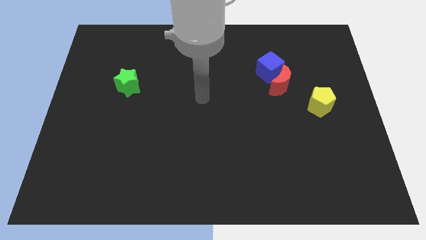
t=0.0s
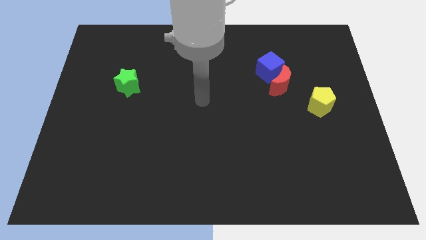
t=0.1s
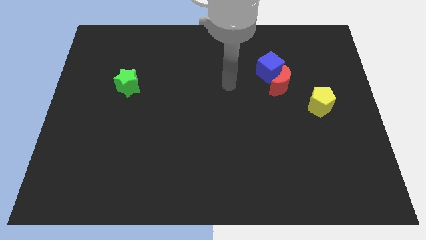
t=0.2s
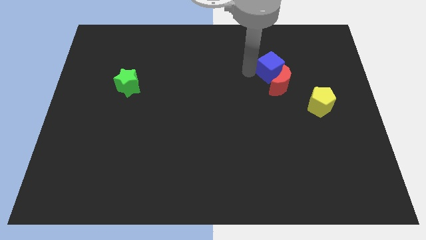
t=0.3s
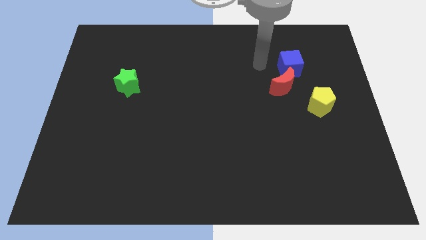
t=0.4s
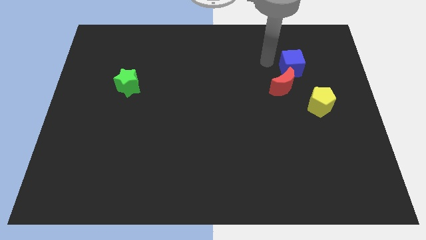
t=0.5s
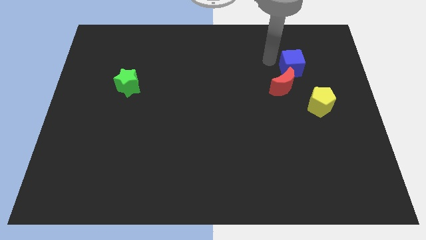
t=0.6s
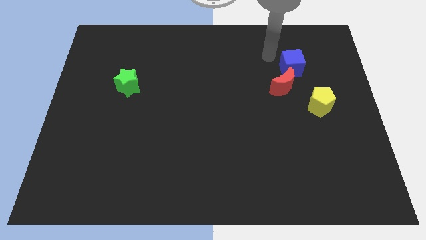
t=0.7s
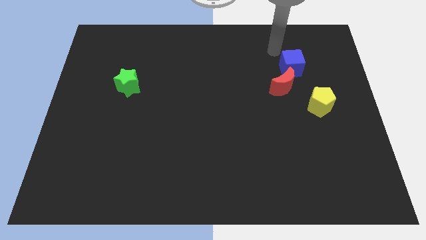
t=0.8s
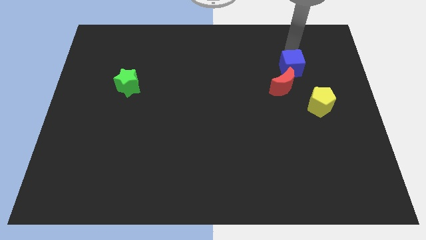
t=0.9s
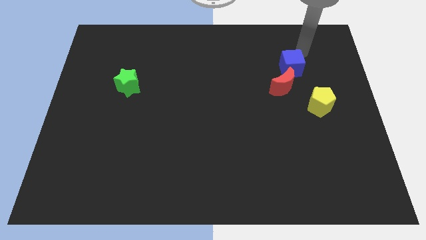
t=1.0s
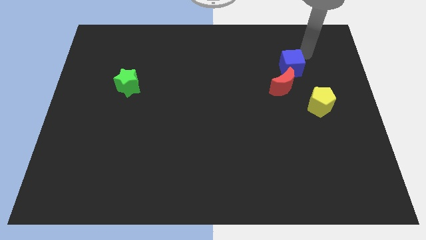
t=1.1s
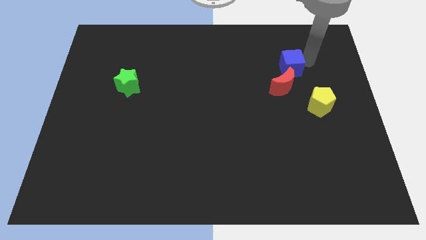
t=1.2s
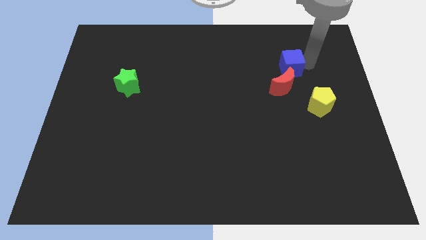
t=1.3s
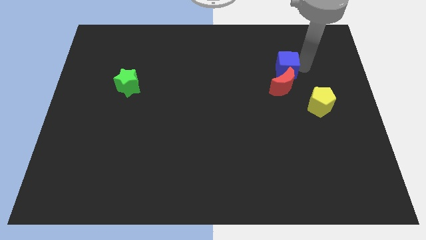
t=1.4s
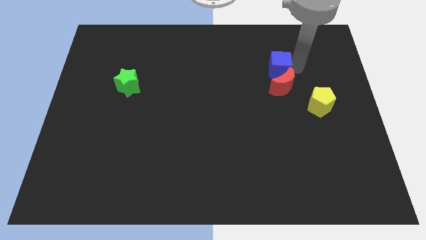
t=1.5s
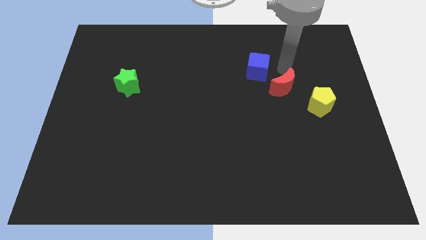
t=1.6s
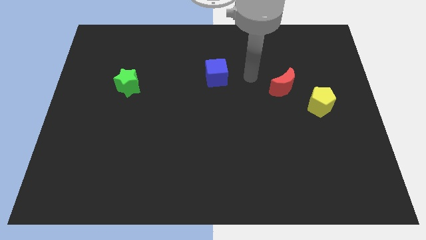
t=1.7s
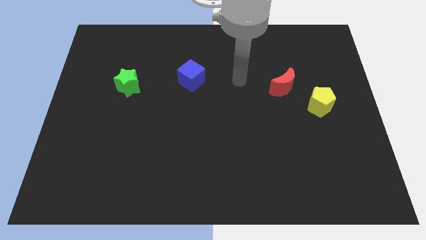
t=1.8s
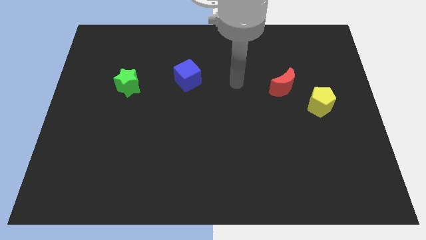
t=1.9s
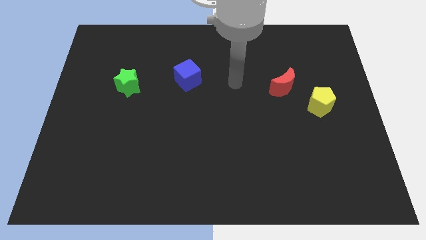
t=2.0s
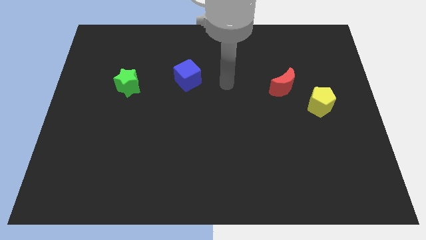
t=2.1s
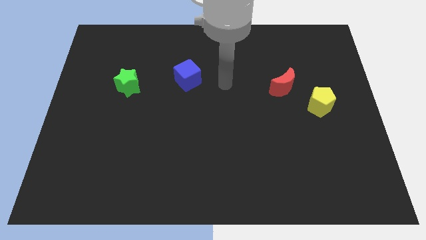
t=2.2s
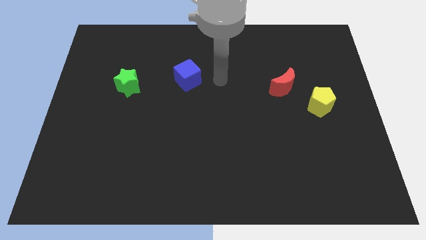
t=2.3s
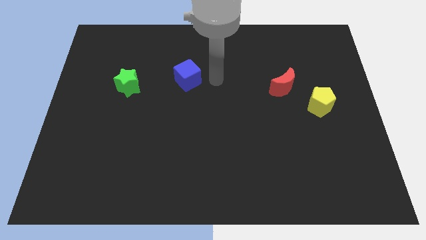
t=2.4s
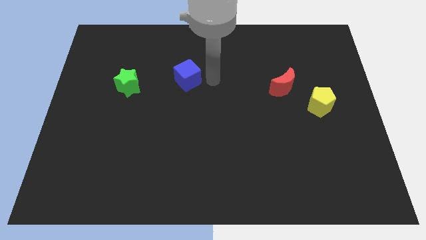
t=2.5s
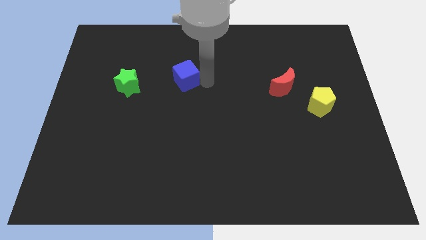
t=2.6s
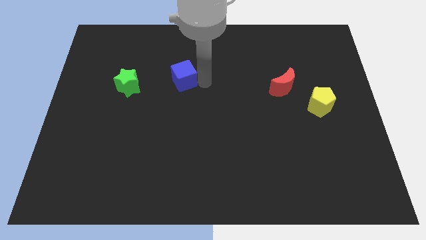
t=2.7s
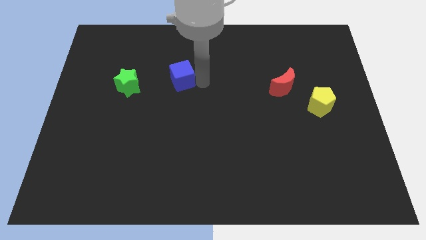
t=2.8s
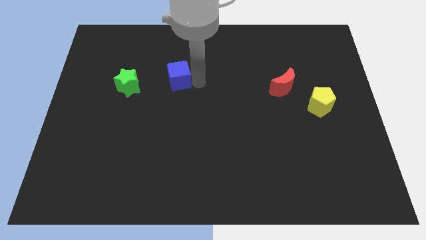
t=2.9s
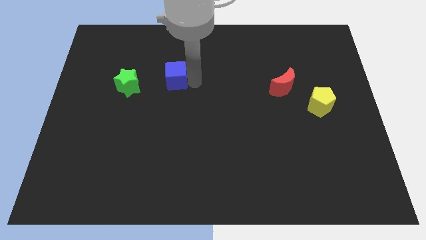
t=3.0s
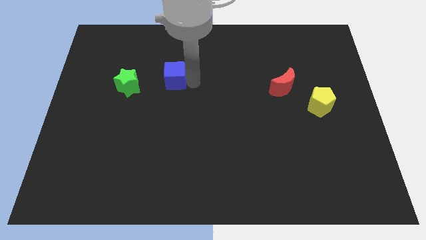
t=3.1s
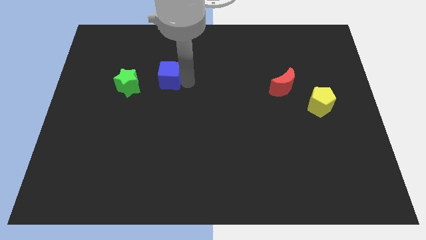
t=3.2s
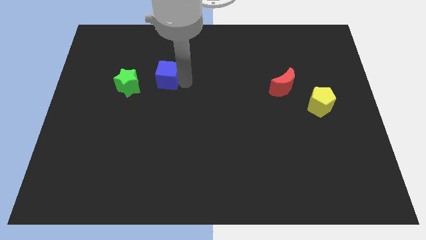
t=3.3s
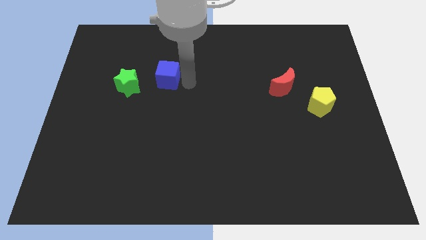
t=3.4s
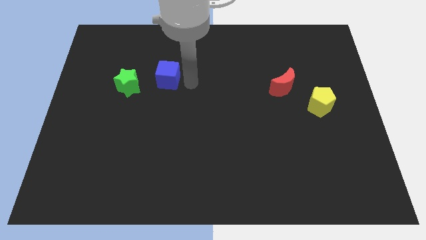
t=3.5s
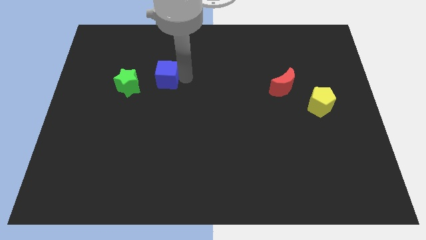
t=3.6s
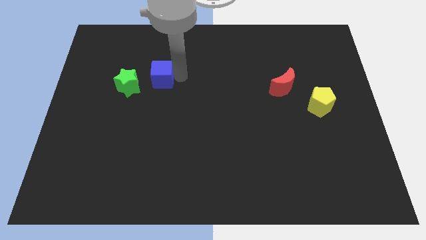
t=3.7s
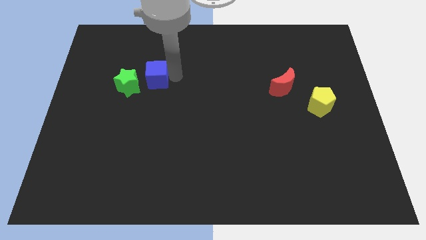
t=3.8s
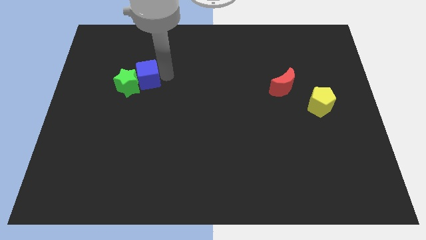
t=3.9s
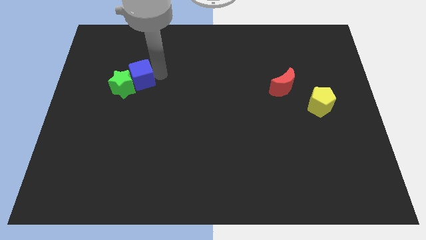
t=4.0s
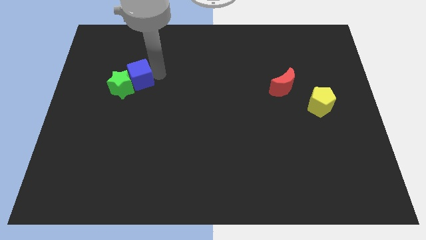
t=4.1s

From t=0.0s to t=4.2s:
put the blue cube towards the green star

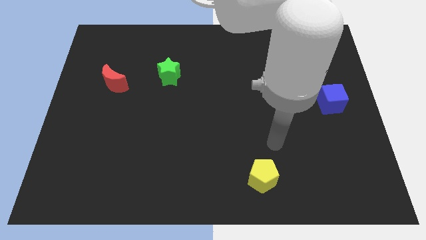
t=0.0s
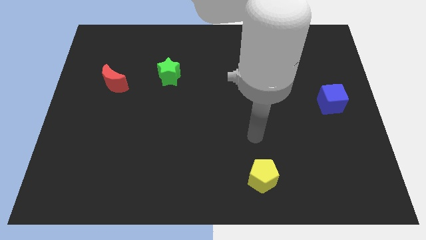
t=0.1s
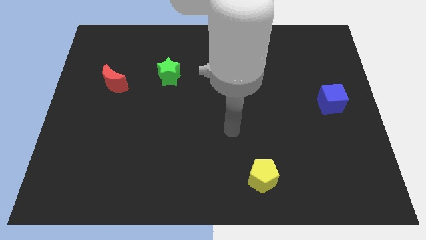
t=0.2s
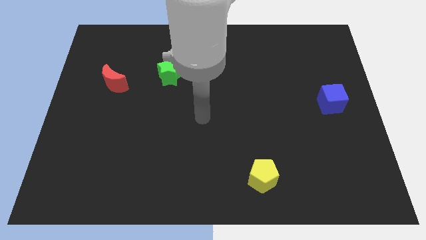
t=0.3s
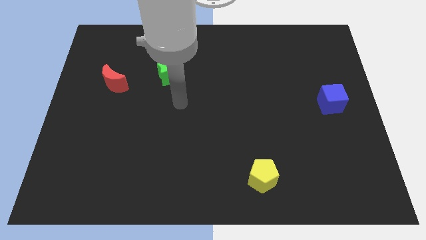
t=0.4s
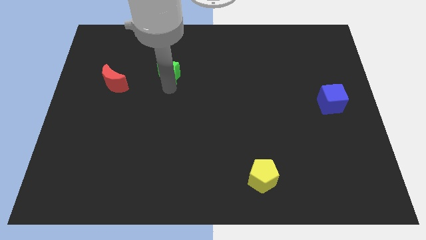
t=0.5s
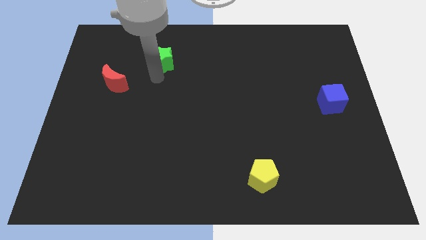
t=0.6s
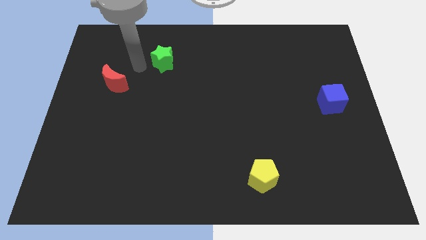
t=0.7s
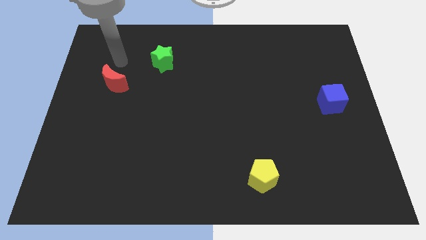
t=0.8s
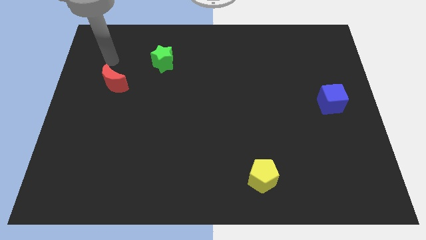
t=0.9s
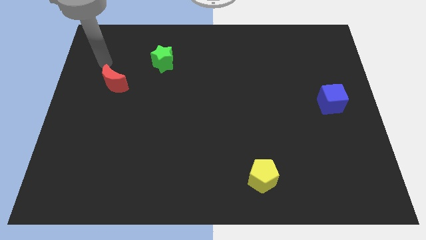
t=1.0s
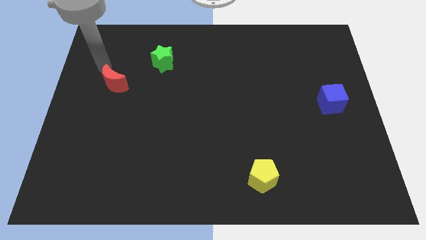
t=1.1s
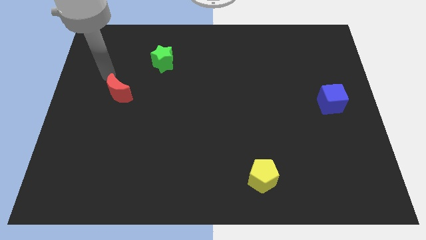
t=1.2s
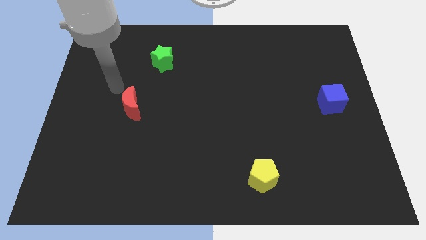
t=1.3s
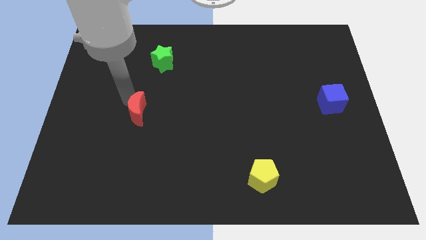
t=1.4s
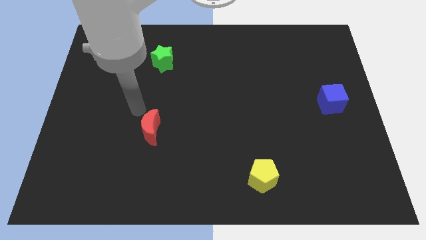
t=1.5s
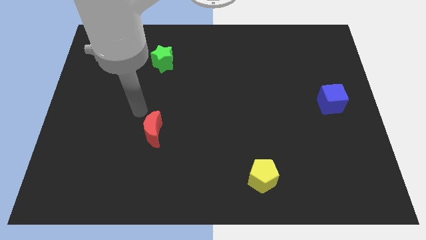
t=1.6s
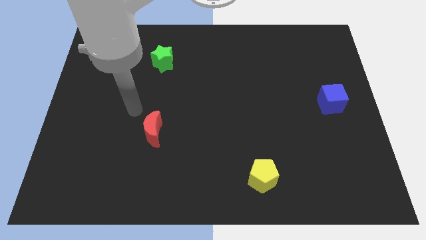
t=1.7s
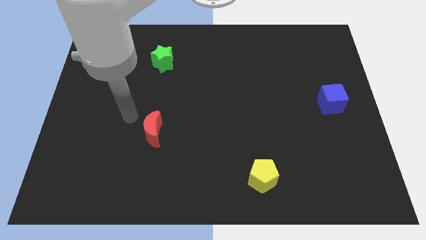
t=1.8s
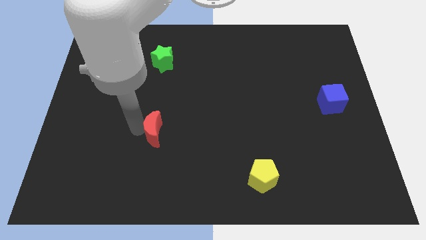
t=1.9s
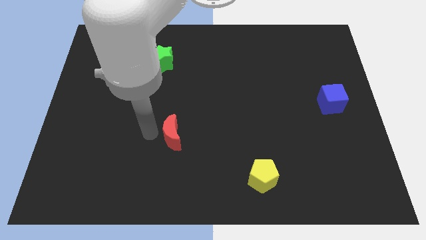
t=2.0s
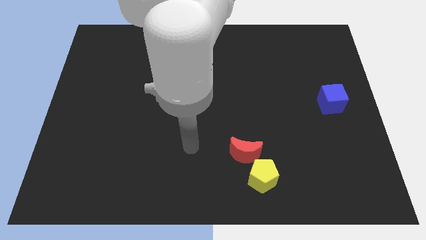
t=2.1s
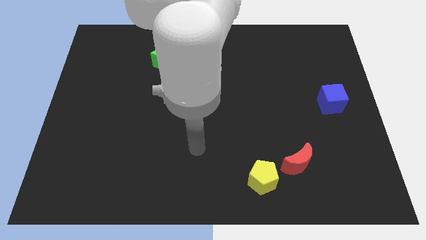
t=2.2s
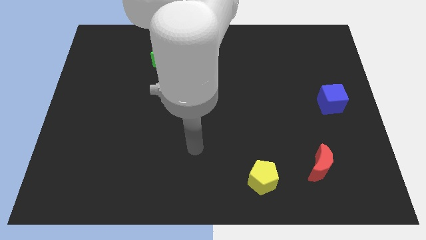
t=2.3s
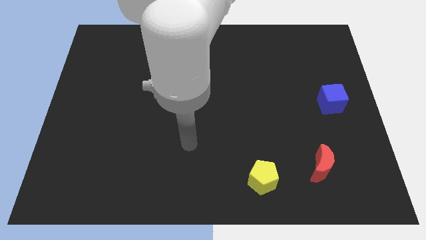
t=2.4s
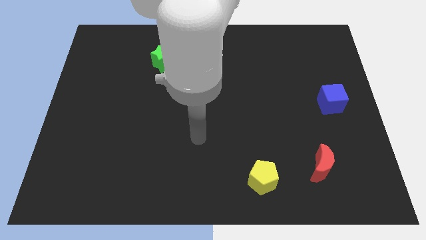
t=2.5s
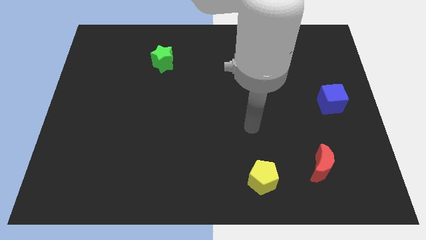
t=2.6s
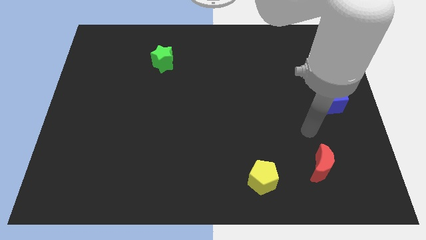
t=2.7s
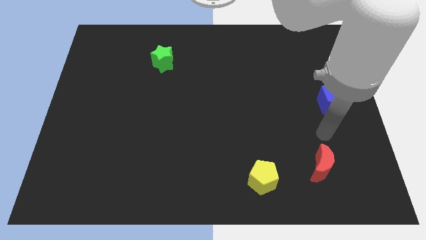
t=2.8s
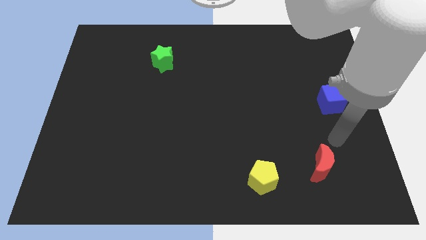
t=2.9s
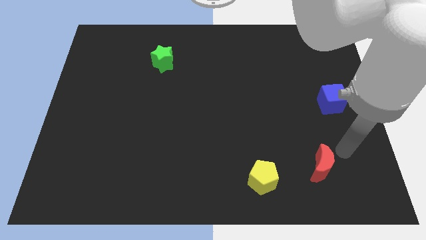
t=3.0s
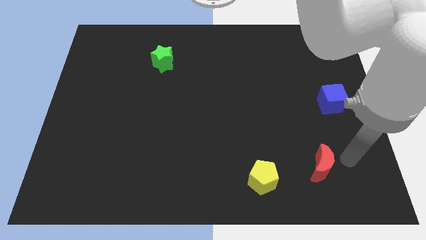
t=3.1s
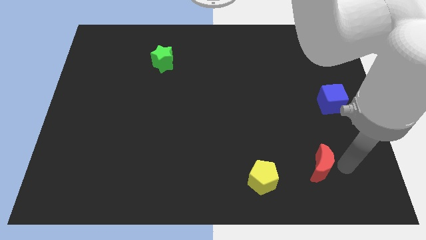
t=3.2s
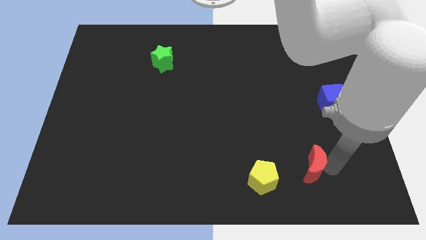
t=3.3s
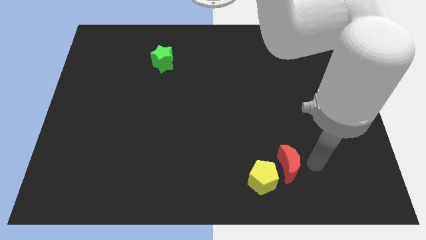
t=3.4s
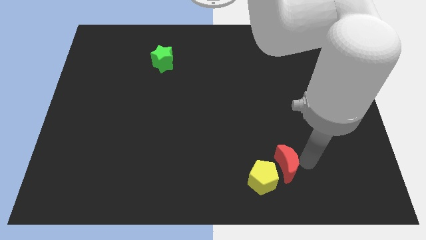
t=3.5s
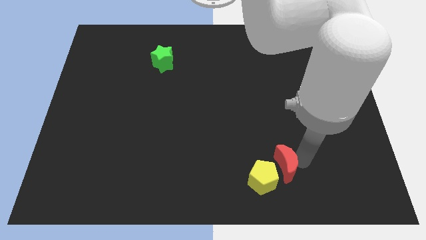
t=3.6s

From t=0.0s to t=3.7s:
push the red block close to the pentagon

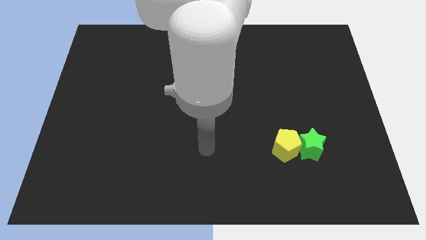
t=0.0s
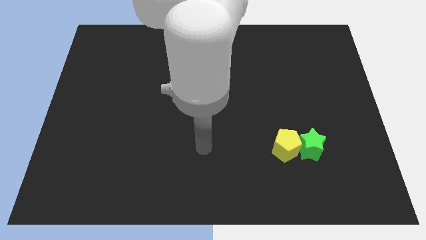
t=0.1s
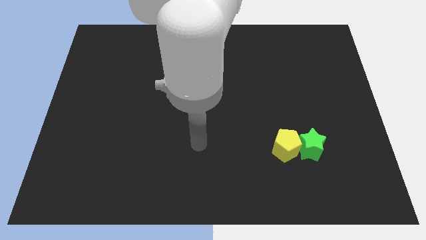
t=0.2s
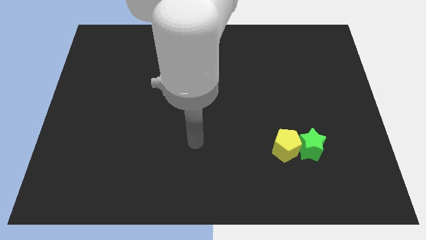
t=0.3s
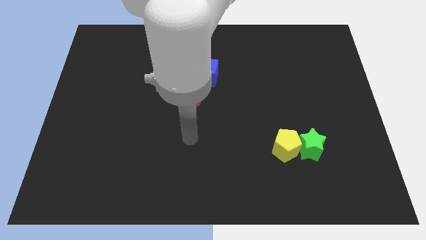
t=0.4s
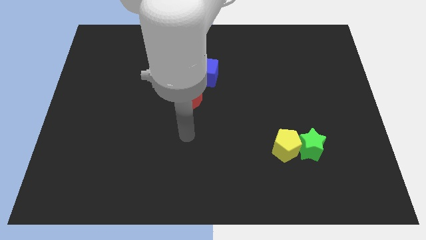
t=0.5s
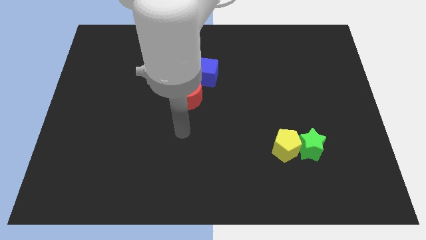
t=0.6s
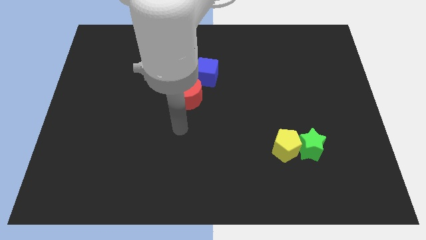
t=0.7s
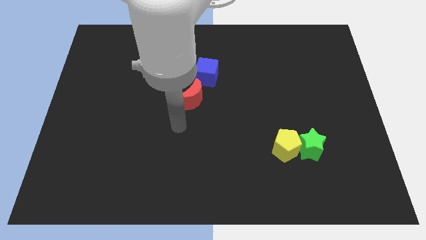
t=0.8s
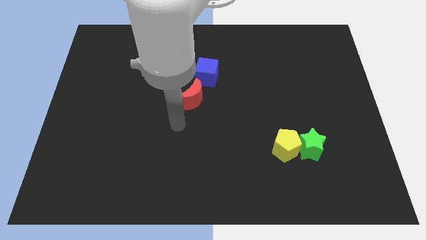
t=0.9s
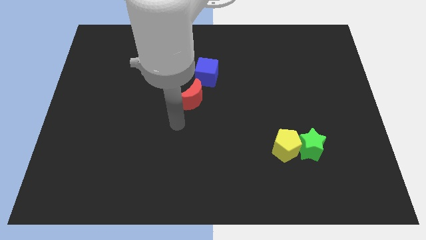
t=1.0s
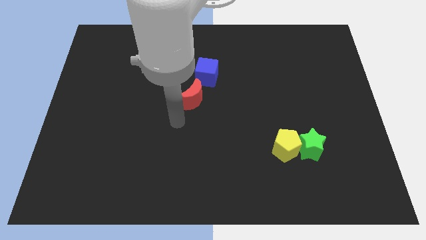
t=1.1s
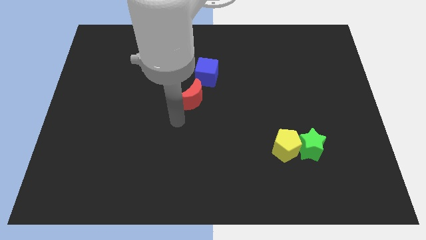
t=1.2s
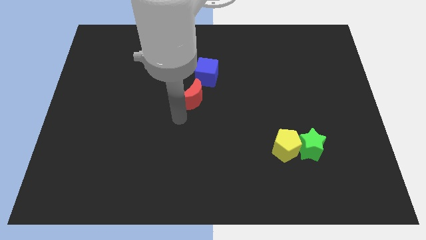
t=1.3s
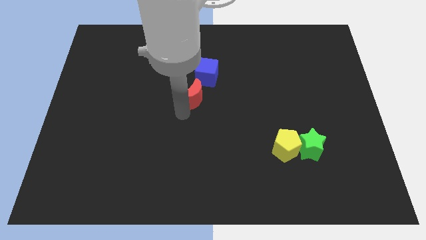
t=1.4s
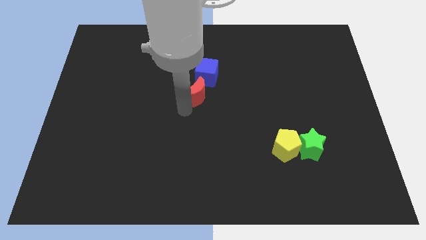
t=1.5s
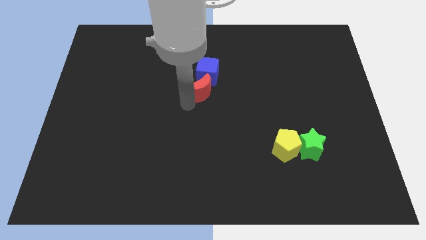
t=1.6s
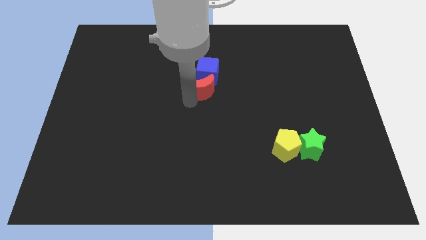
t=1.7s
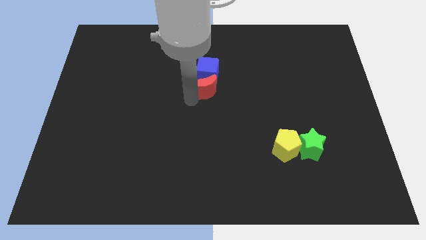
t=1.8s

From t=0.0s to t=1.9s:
move the red moon close to the blue cube
